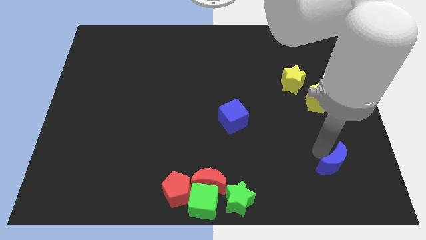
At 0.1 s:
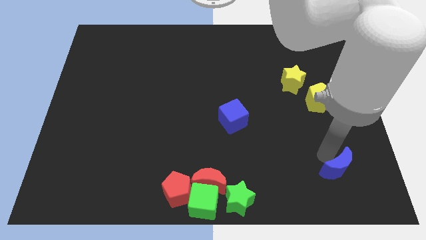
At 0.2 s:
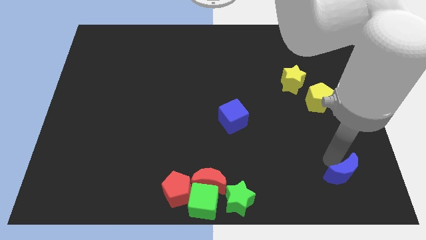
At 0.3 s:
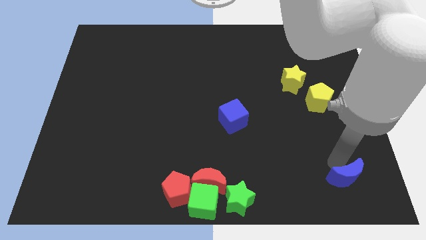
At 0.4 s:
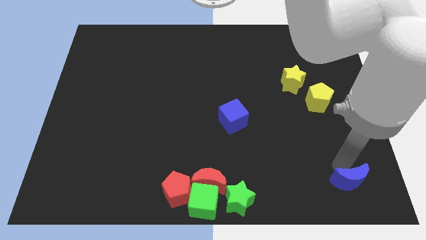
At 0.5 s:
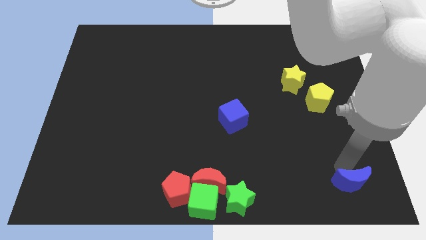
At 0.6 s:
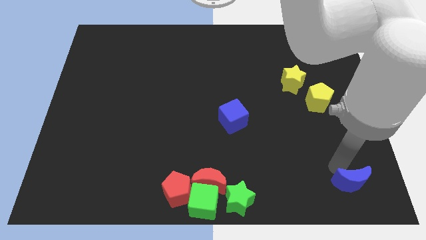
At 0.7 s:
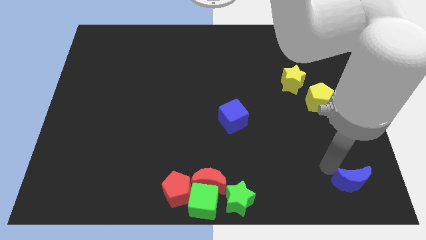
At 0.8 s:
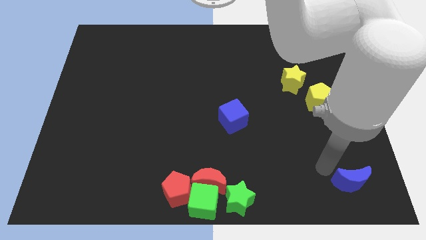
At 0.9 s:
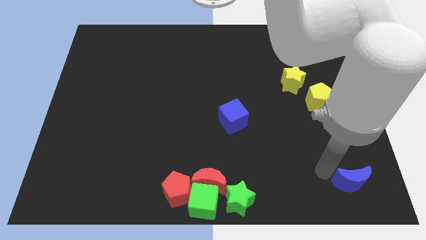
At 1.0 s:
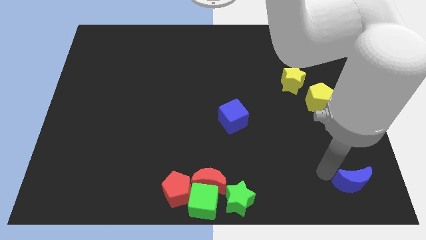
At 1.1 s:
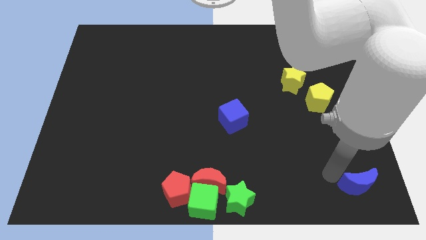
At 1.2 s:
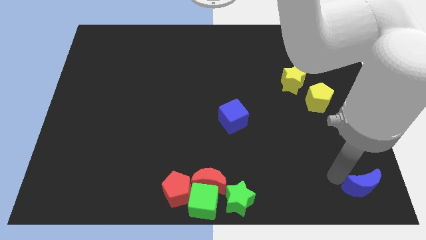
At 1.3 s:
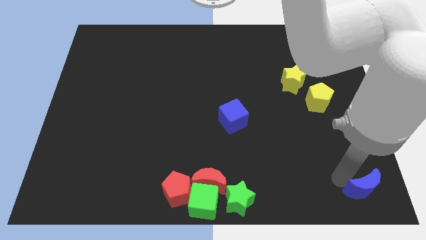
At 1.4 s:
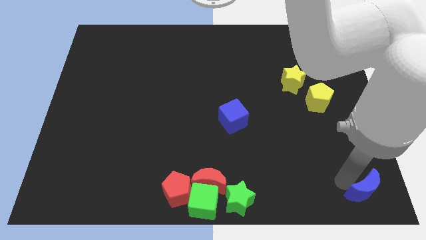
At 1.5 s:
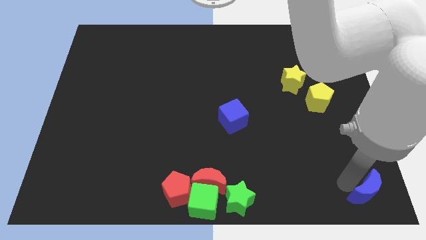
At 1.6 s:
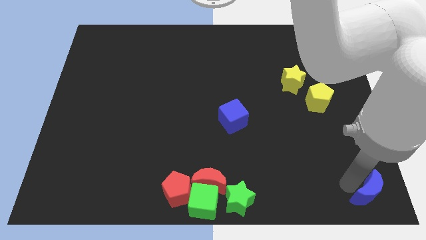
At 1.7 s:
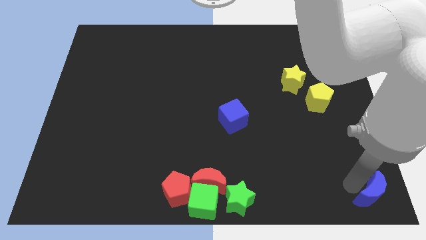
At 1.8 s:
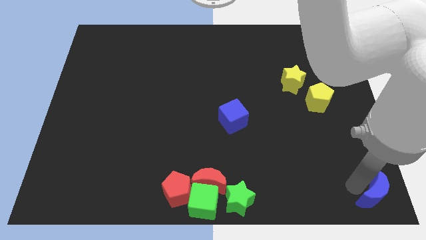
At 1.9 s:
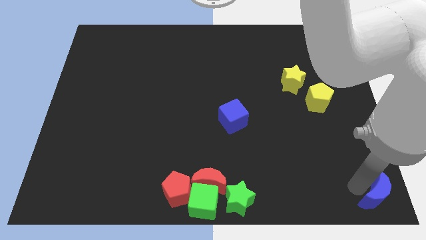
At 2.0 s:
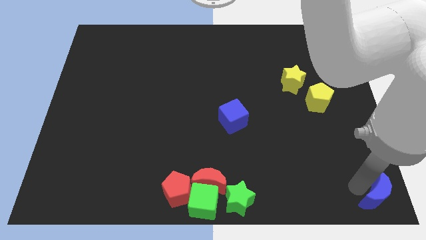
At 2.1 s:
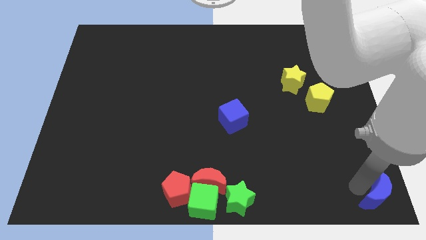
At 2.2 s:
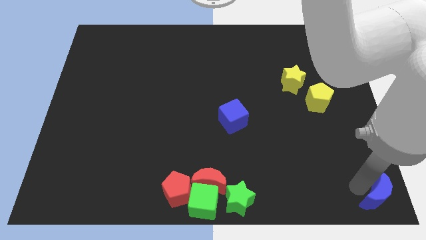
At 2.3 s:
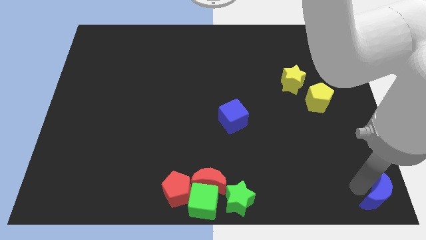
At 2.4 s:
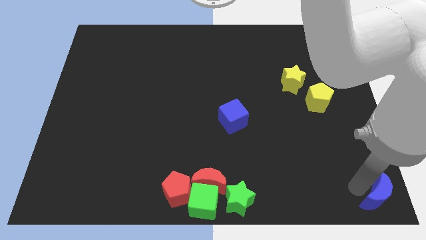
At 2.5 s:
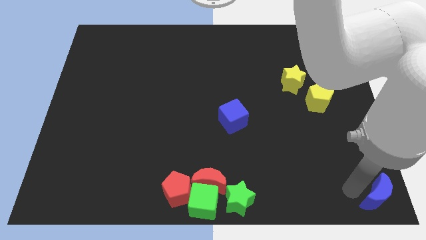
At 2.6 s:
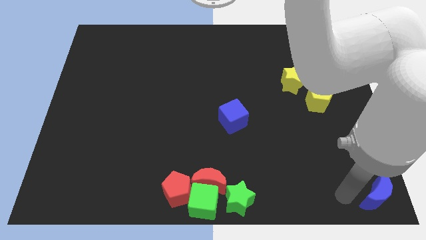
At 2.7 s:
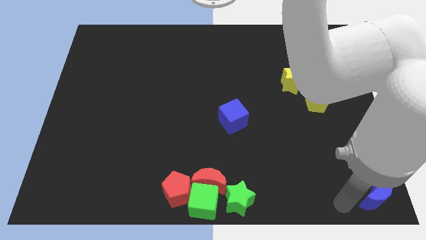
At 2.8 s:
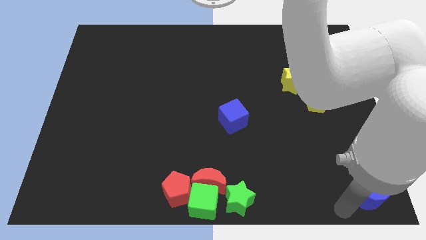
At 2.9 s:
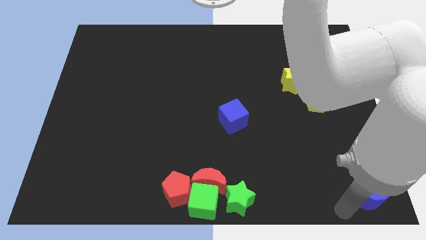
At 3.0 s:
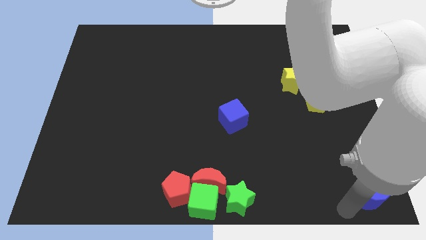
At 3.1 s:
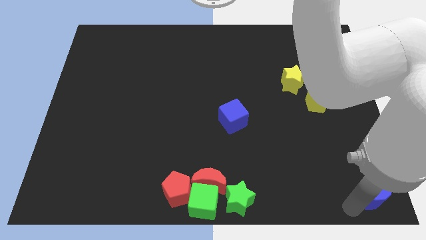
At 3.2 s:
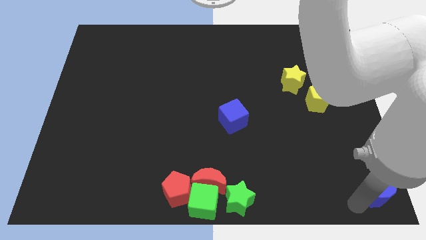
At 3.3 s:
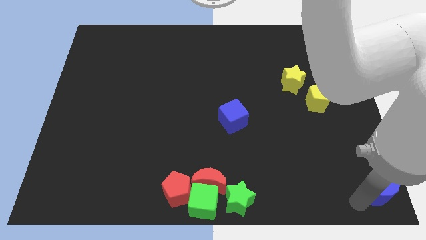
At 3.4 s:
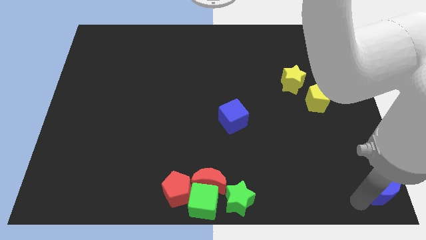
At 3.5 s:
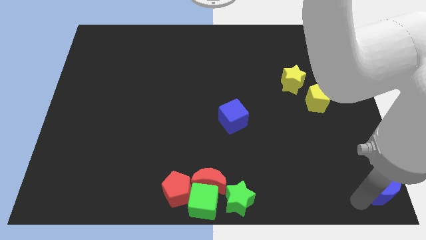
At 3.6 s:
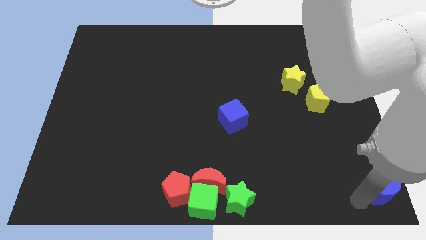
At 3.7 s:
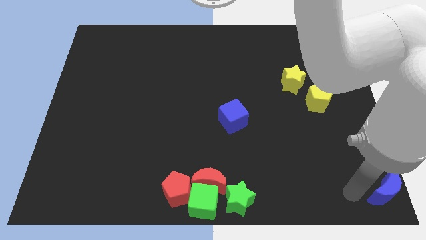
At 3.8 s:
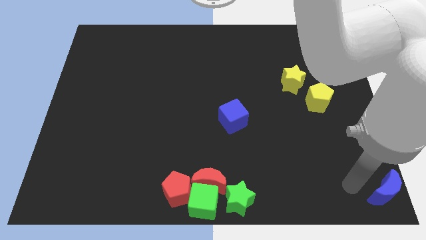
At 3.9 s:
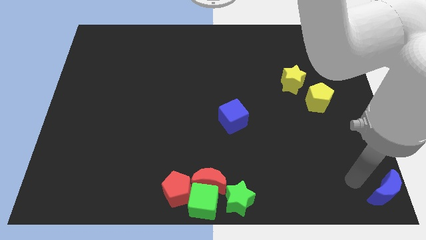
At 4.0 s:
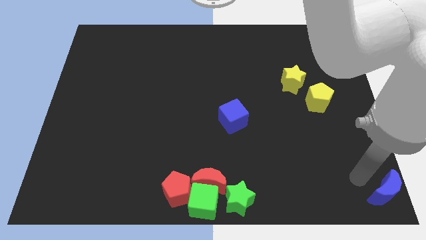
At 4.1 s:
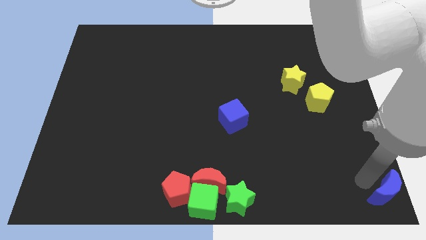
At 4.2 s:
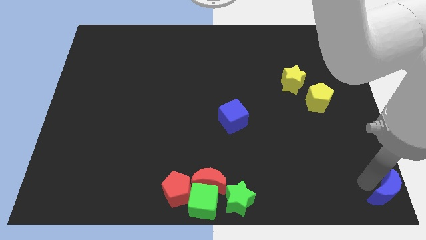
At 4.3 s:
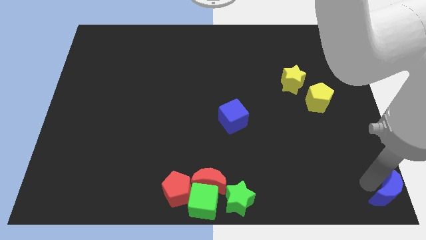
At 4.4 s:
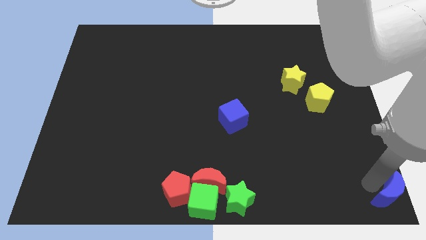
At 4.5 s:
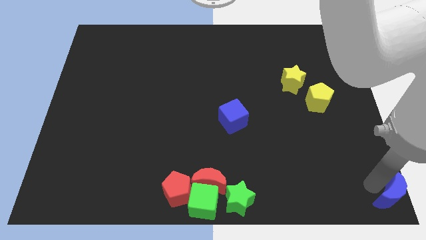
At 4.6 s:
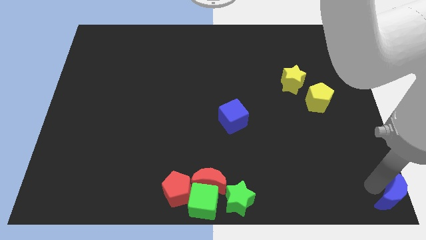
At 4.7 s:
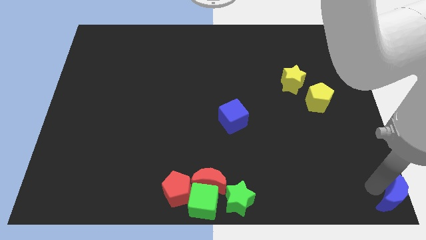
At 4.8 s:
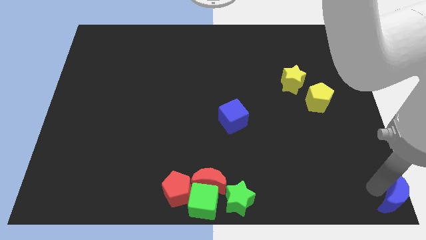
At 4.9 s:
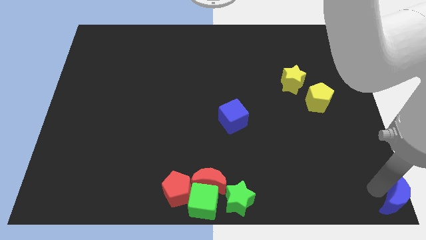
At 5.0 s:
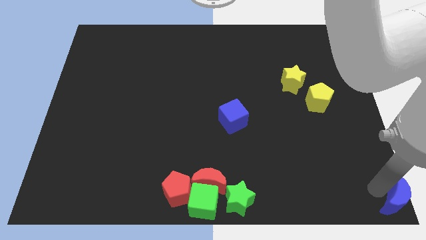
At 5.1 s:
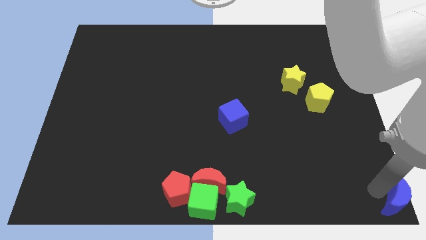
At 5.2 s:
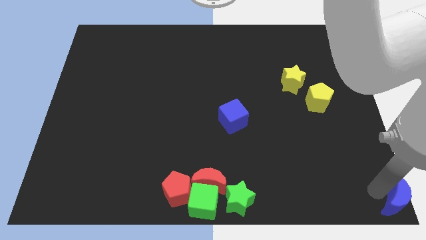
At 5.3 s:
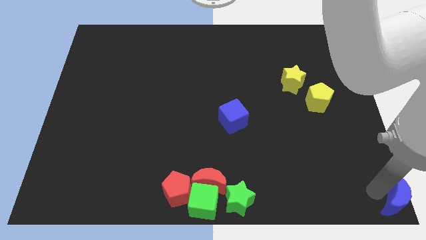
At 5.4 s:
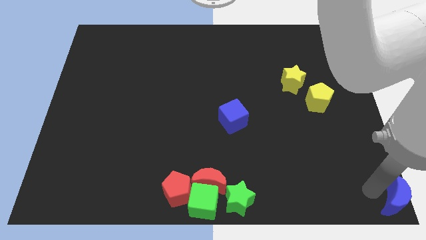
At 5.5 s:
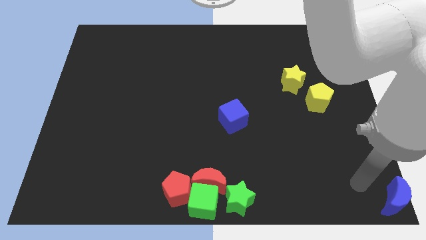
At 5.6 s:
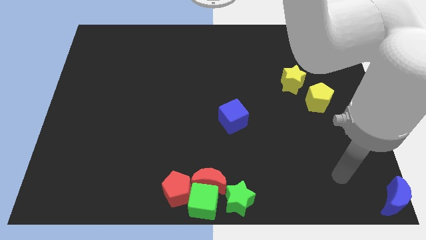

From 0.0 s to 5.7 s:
push the blue moon to the bottom right corner

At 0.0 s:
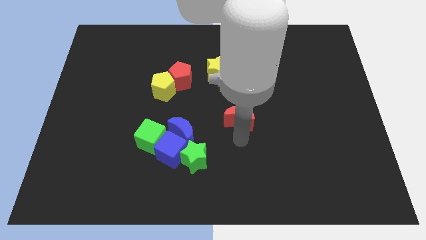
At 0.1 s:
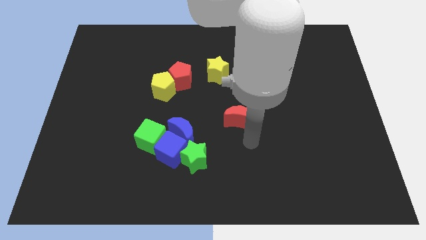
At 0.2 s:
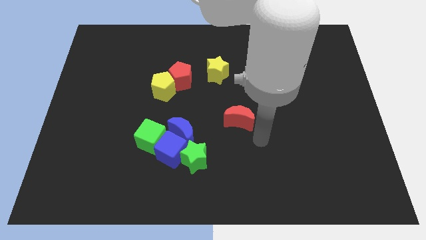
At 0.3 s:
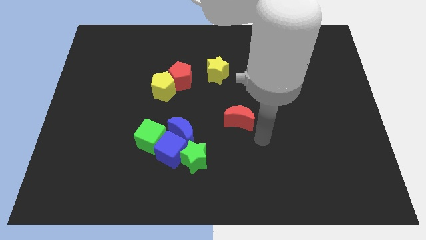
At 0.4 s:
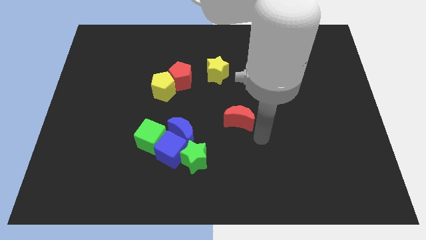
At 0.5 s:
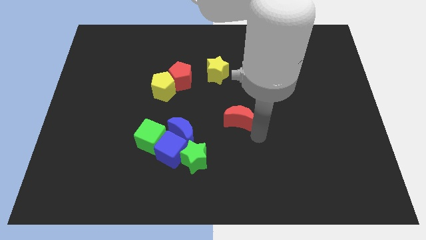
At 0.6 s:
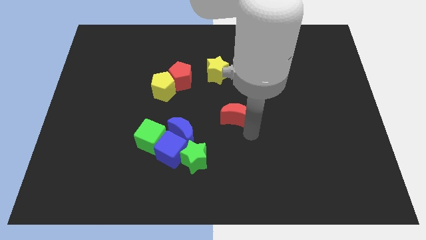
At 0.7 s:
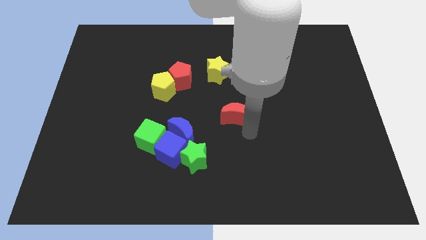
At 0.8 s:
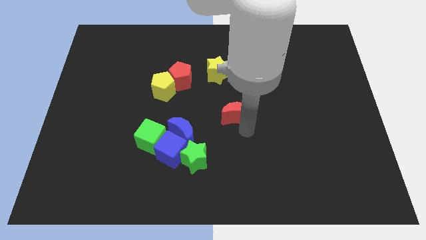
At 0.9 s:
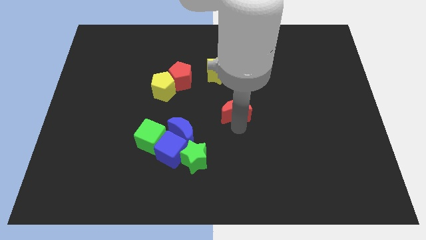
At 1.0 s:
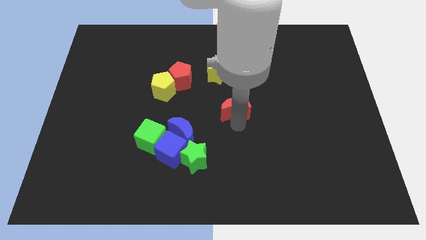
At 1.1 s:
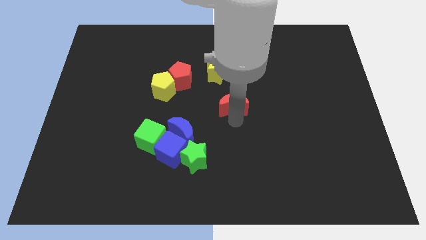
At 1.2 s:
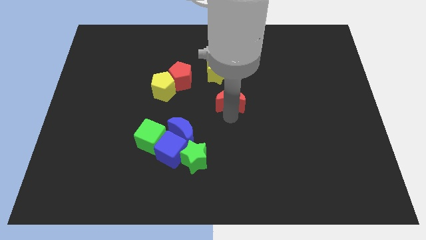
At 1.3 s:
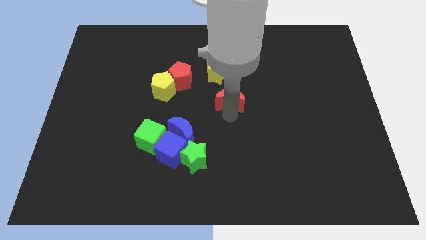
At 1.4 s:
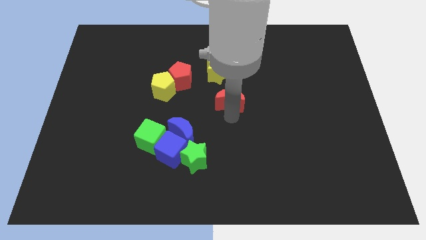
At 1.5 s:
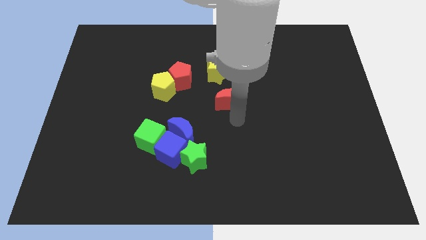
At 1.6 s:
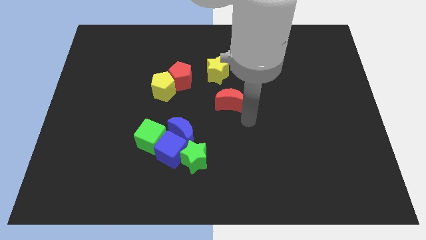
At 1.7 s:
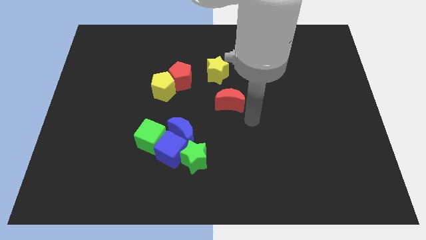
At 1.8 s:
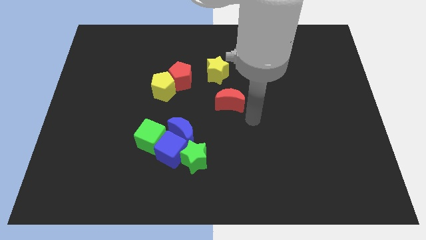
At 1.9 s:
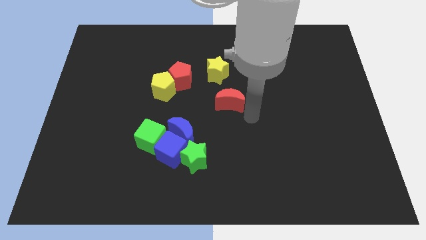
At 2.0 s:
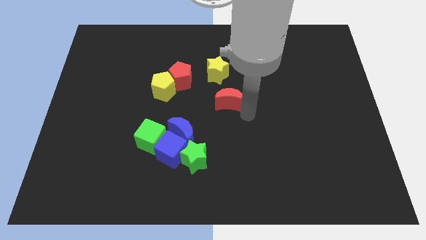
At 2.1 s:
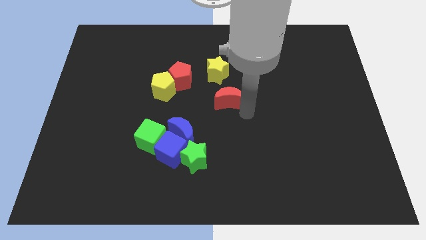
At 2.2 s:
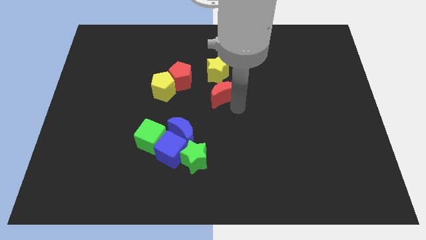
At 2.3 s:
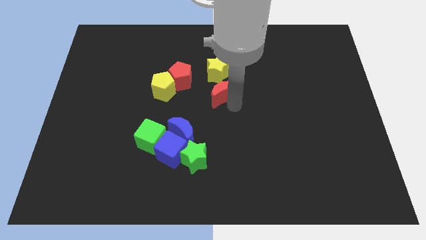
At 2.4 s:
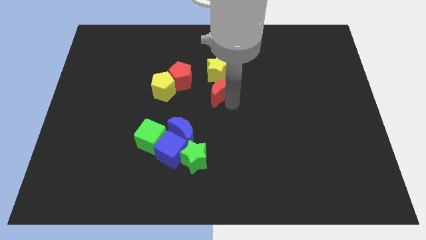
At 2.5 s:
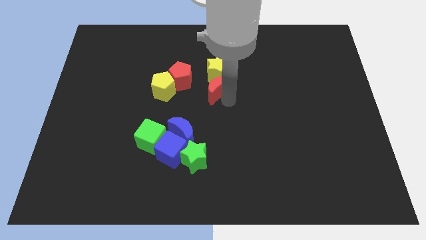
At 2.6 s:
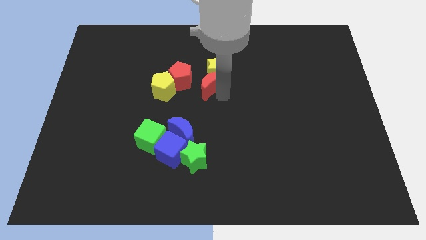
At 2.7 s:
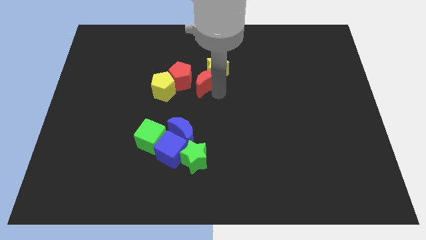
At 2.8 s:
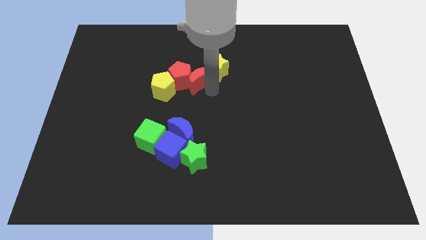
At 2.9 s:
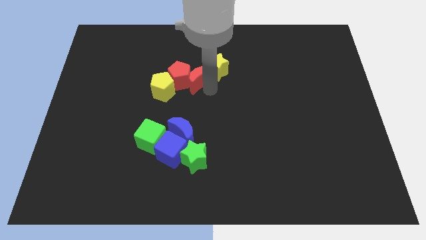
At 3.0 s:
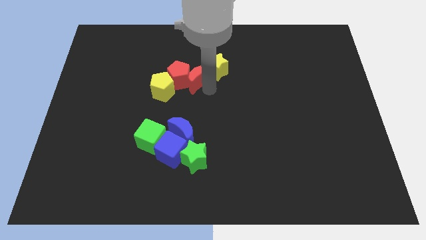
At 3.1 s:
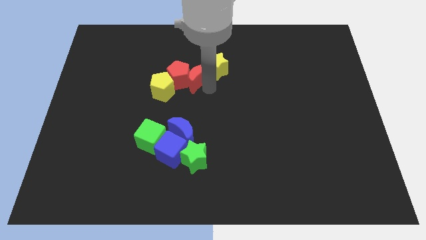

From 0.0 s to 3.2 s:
push the red moon close to the red pentagon
